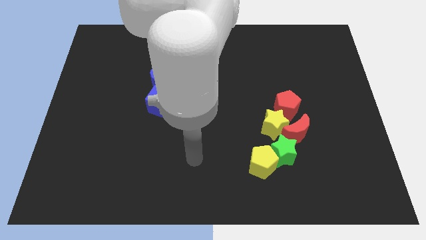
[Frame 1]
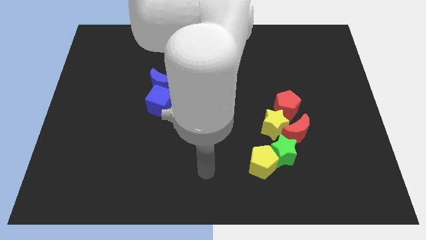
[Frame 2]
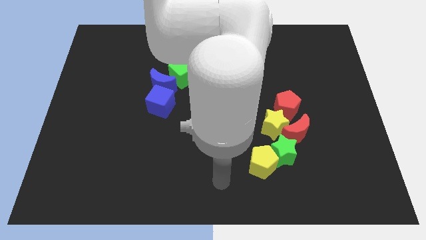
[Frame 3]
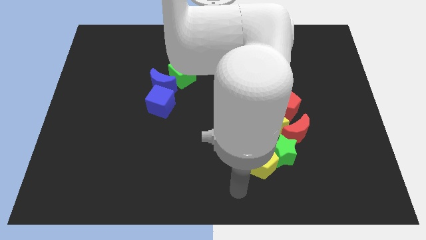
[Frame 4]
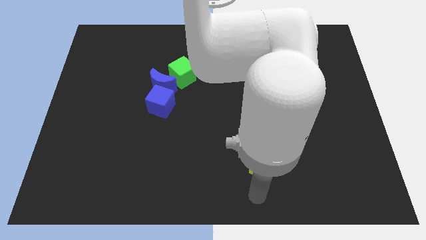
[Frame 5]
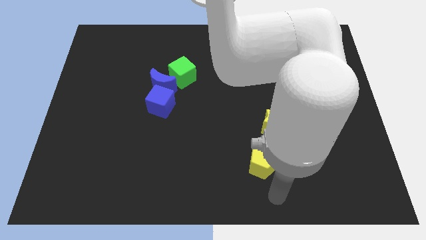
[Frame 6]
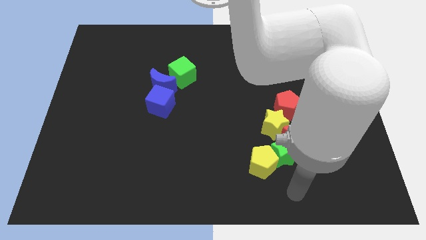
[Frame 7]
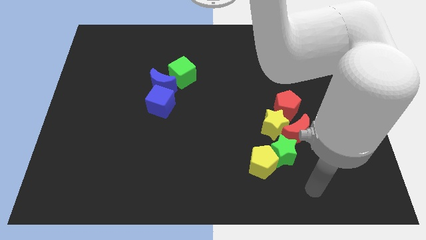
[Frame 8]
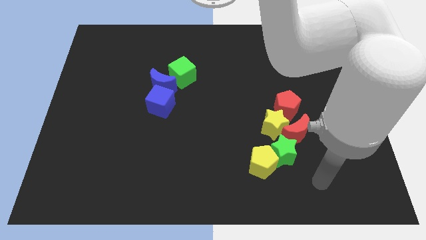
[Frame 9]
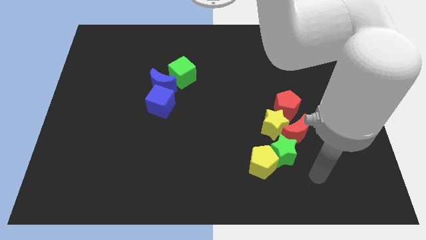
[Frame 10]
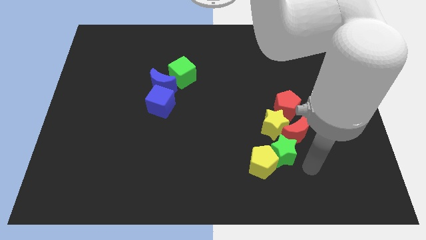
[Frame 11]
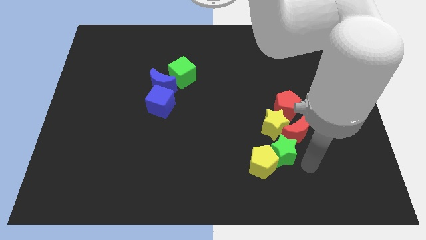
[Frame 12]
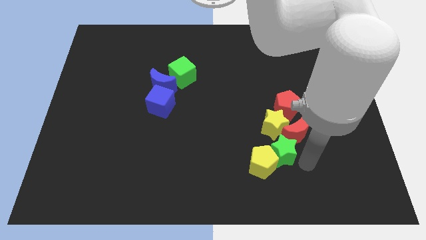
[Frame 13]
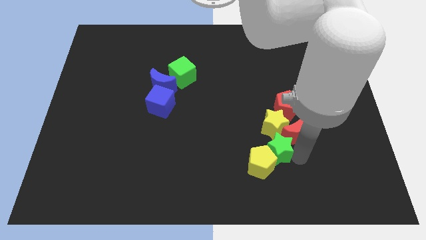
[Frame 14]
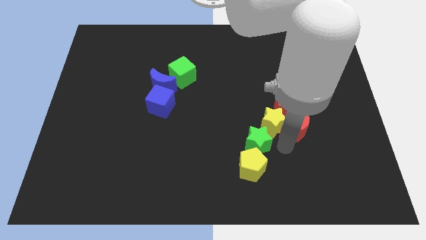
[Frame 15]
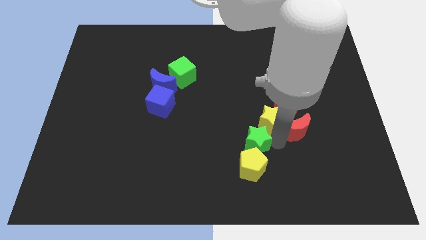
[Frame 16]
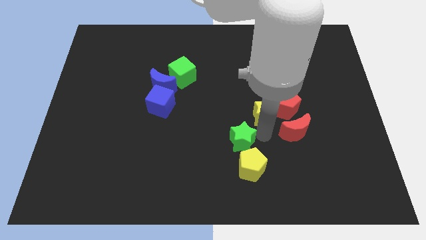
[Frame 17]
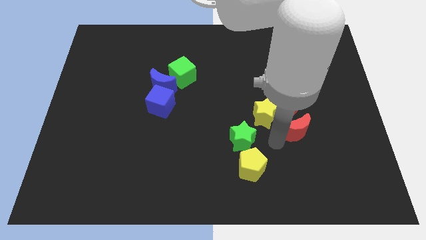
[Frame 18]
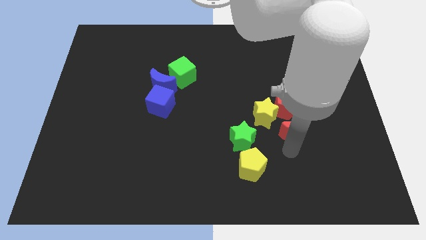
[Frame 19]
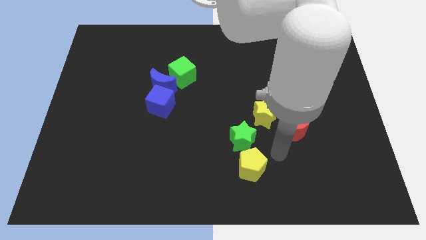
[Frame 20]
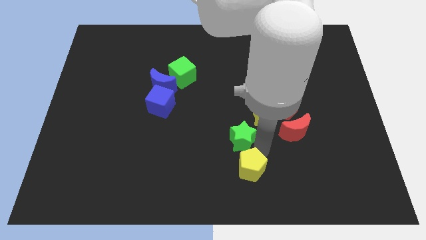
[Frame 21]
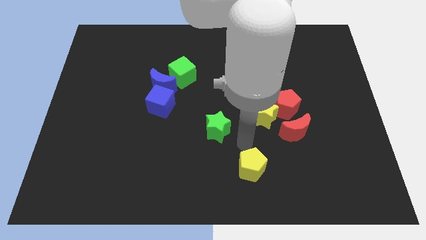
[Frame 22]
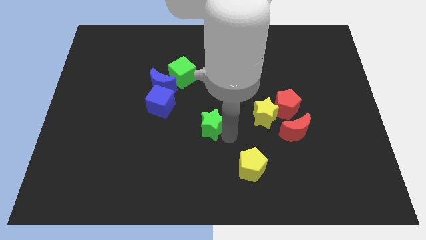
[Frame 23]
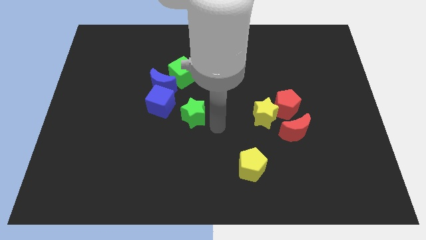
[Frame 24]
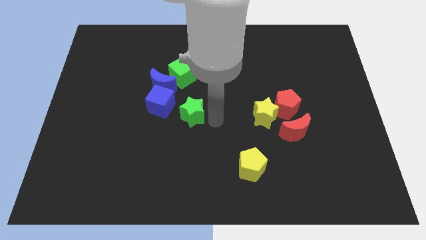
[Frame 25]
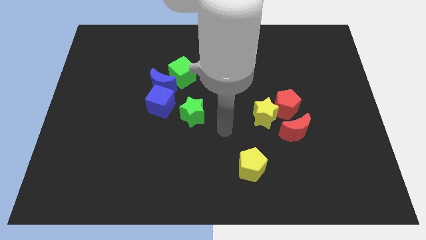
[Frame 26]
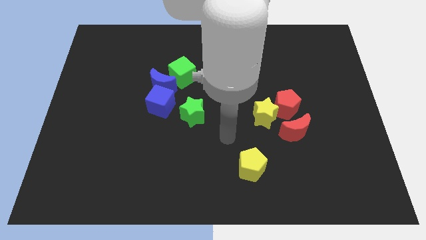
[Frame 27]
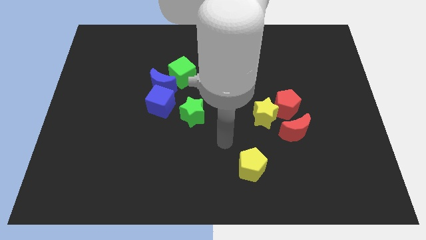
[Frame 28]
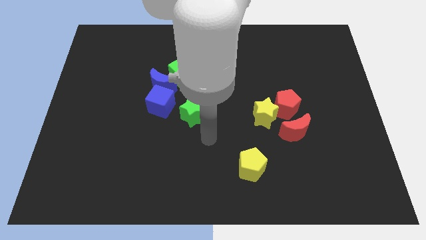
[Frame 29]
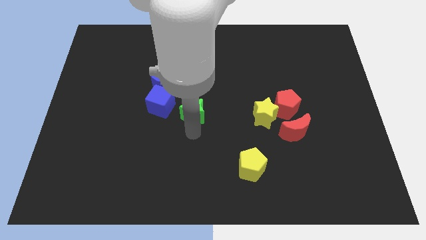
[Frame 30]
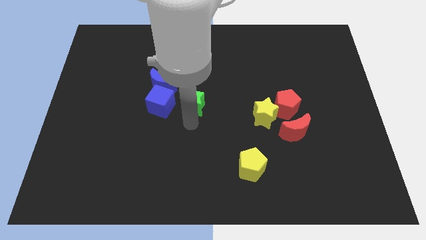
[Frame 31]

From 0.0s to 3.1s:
separate green star from yellow pentagon

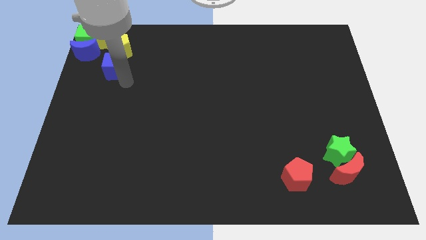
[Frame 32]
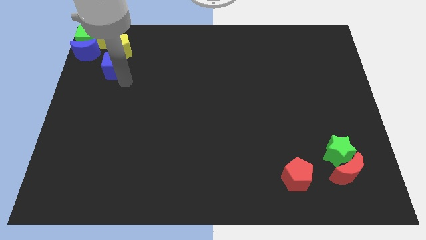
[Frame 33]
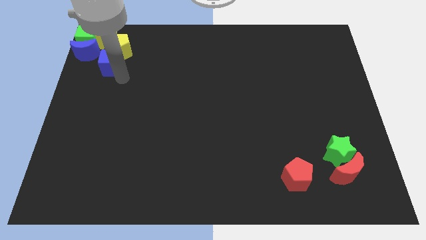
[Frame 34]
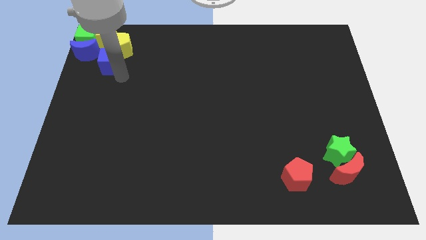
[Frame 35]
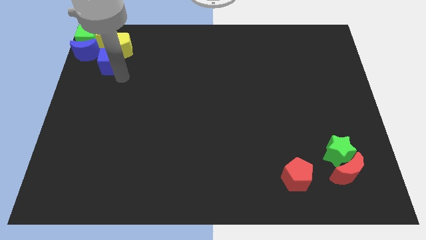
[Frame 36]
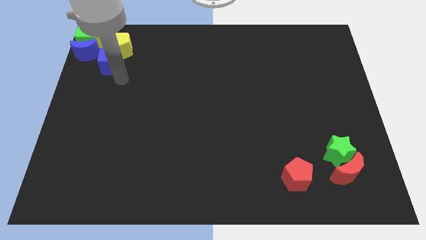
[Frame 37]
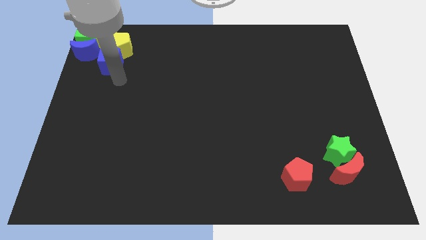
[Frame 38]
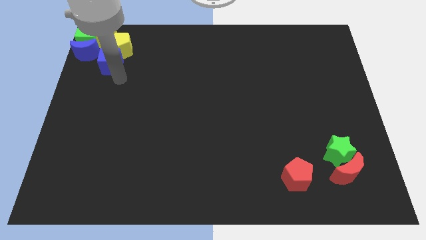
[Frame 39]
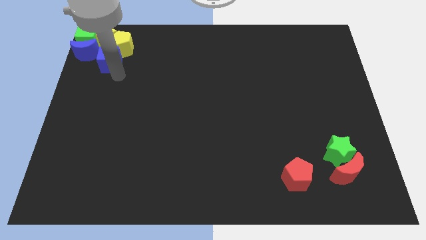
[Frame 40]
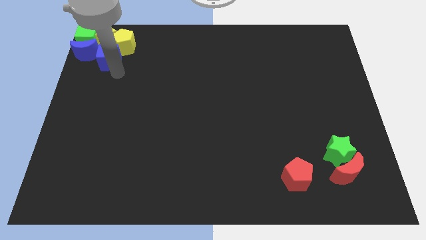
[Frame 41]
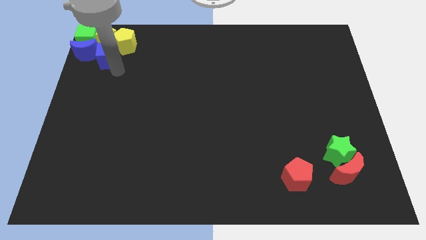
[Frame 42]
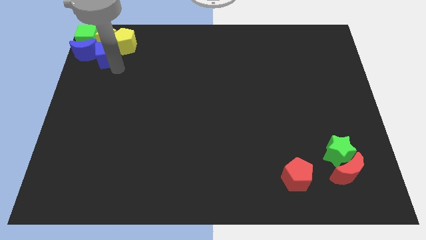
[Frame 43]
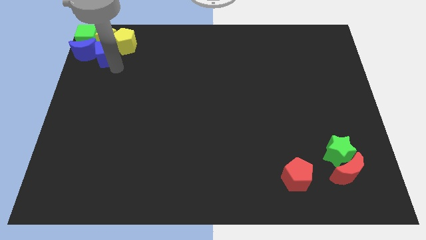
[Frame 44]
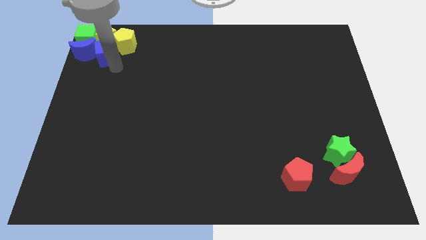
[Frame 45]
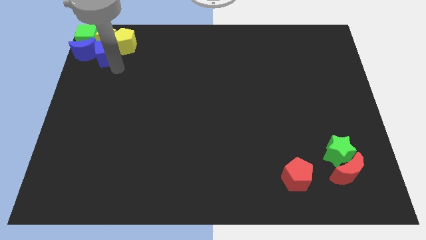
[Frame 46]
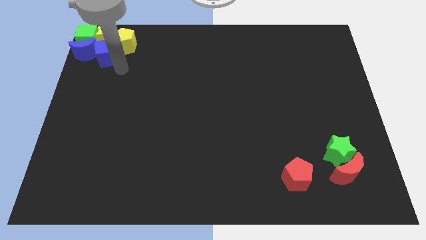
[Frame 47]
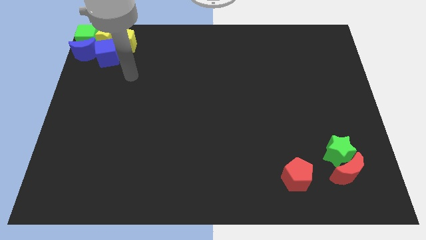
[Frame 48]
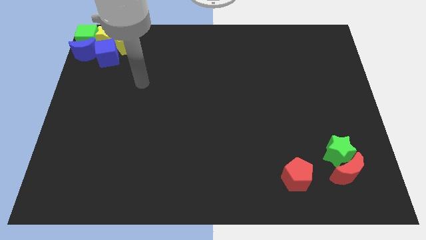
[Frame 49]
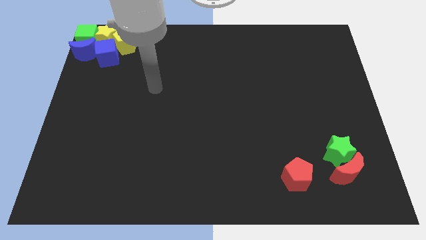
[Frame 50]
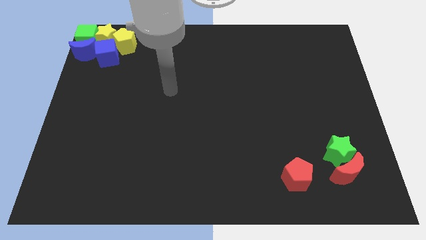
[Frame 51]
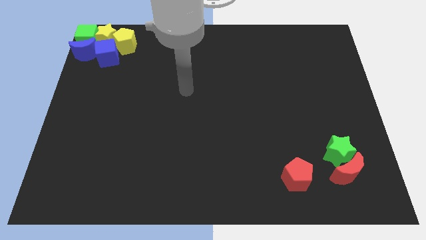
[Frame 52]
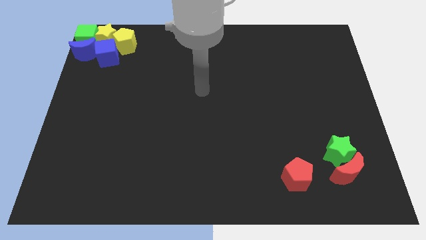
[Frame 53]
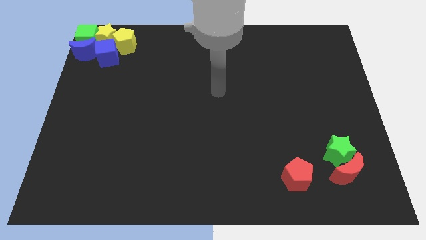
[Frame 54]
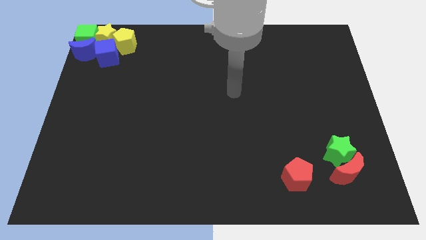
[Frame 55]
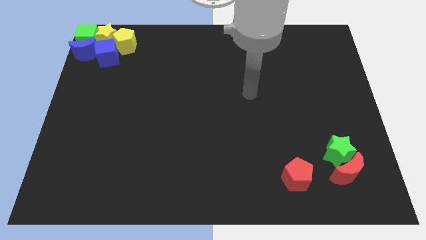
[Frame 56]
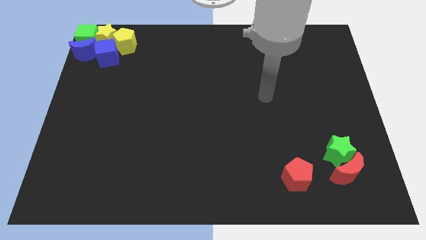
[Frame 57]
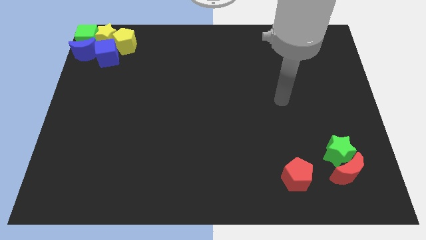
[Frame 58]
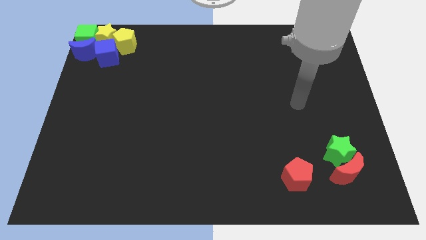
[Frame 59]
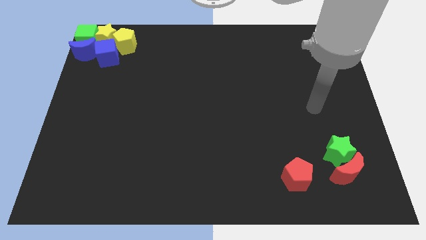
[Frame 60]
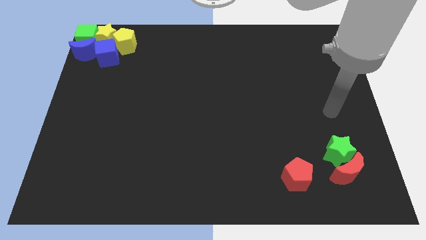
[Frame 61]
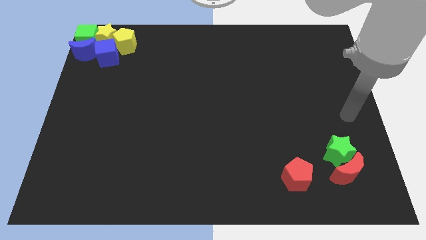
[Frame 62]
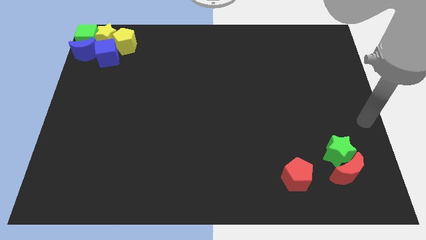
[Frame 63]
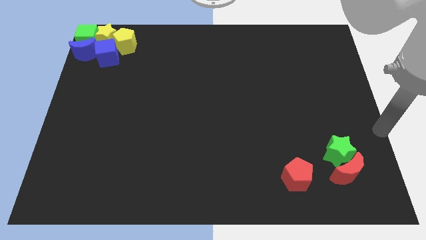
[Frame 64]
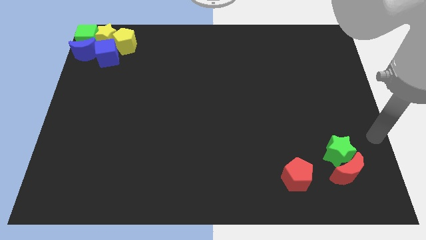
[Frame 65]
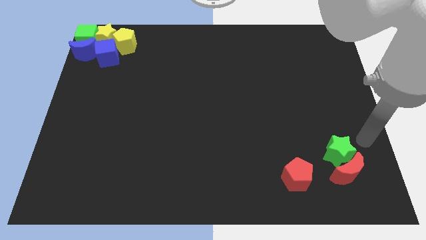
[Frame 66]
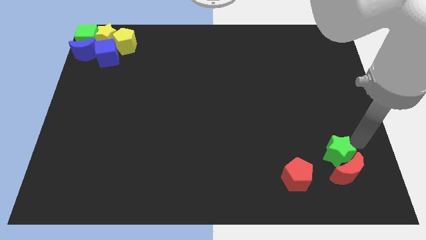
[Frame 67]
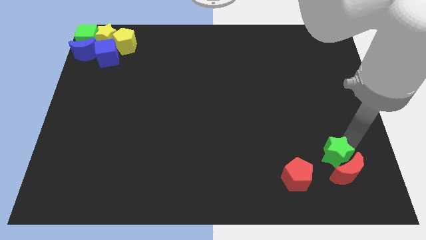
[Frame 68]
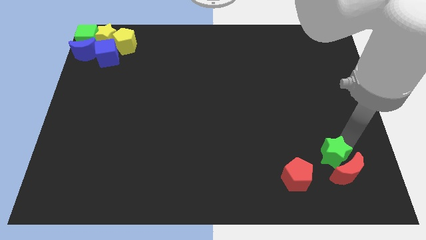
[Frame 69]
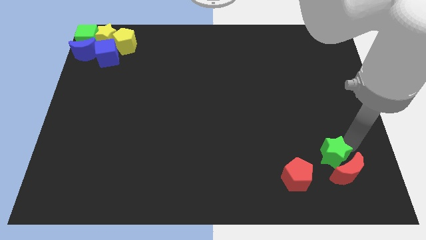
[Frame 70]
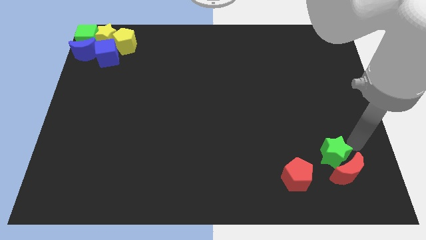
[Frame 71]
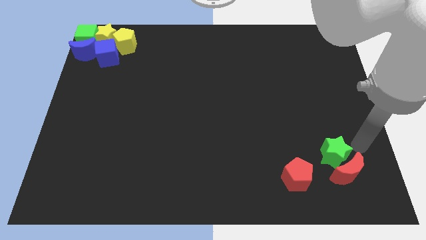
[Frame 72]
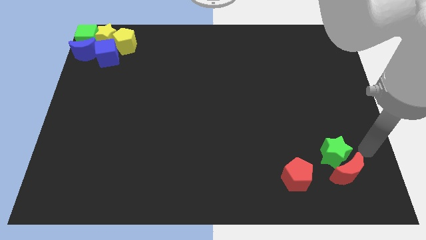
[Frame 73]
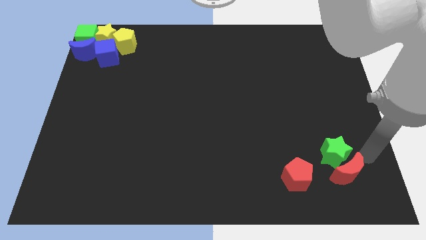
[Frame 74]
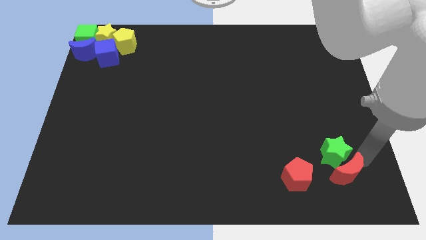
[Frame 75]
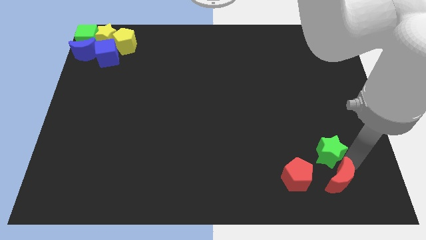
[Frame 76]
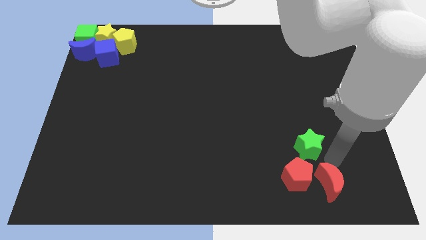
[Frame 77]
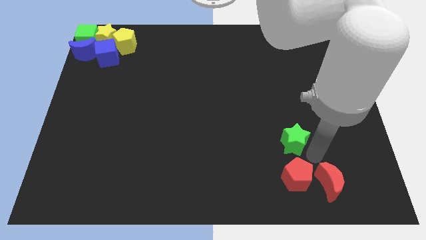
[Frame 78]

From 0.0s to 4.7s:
move the green star on the bottom of the red crescent

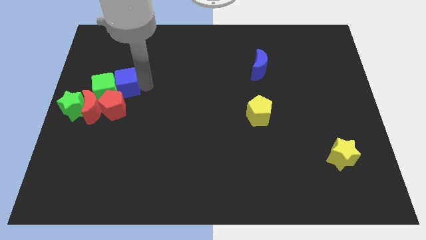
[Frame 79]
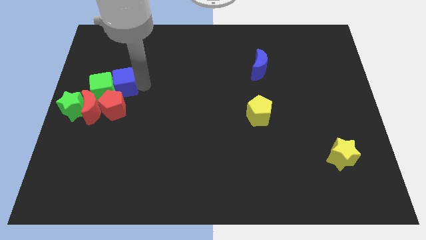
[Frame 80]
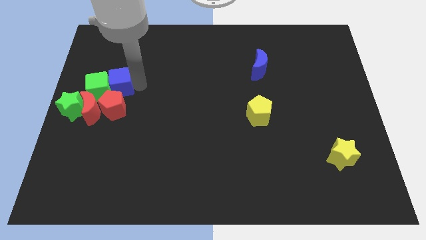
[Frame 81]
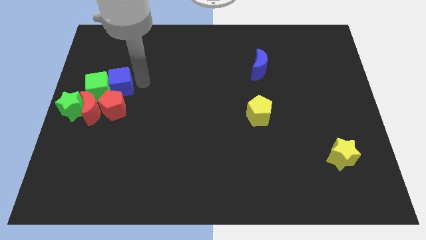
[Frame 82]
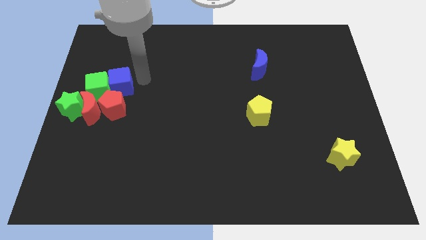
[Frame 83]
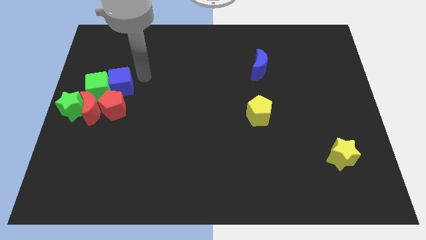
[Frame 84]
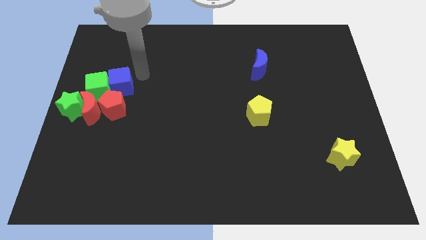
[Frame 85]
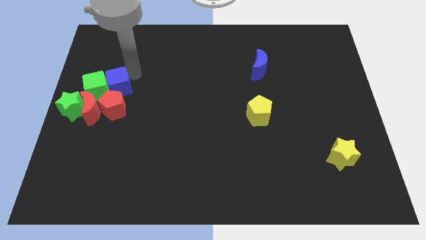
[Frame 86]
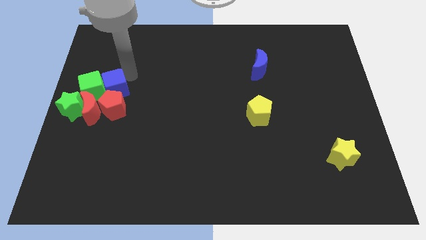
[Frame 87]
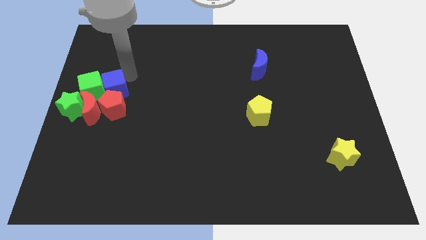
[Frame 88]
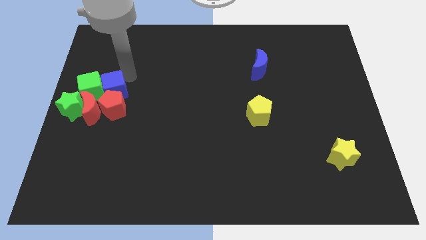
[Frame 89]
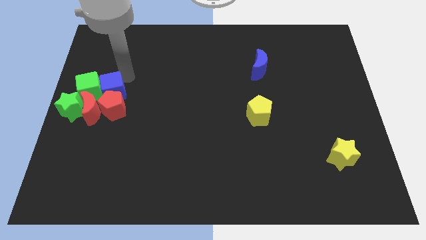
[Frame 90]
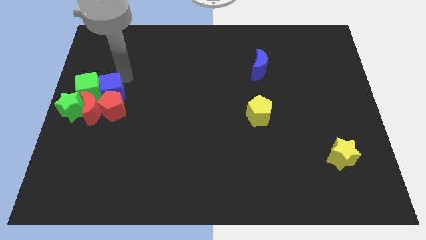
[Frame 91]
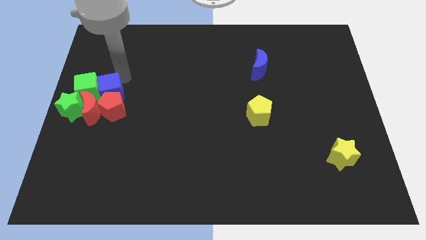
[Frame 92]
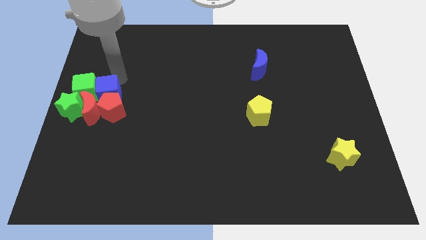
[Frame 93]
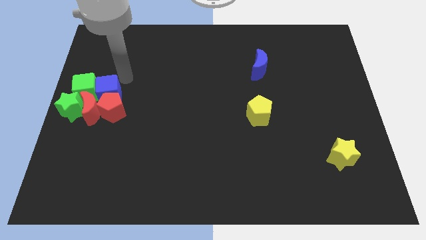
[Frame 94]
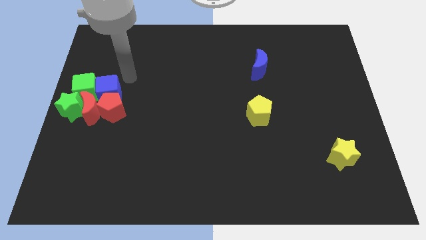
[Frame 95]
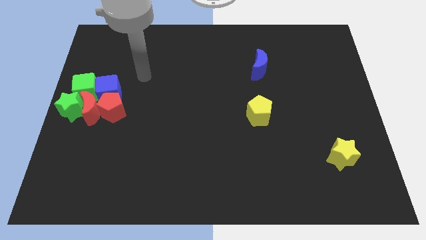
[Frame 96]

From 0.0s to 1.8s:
place blue cube to the top of red pentagon
